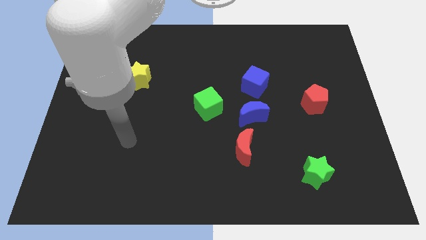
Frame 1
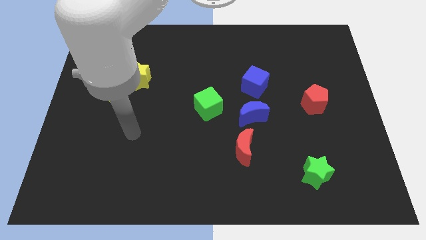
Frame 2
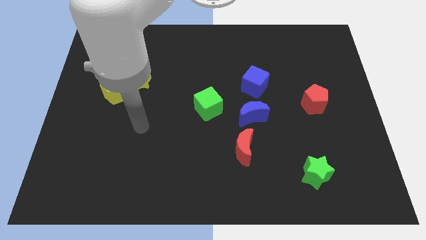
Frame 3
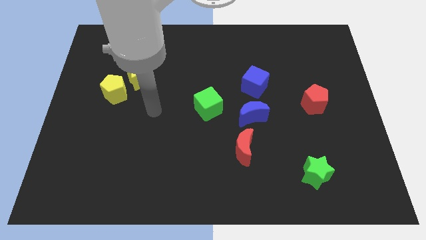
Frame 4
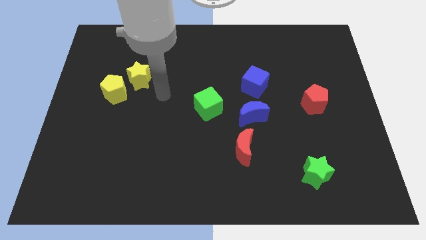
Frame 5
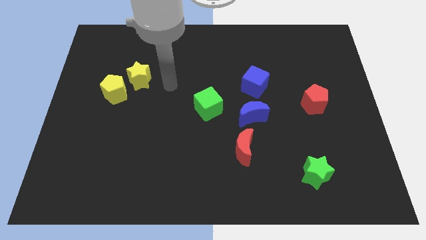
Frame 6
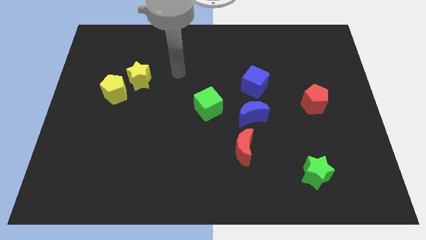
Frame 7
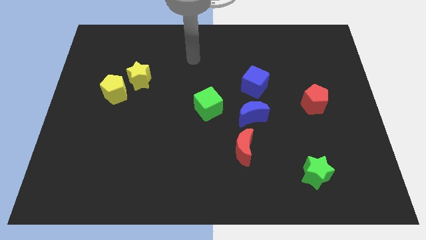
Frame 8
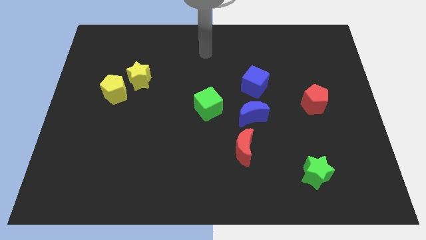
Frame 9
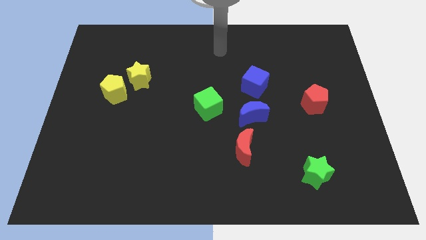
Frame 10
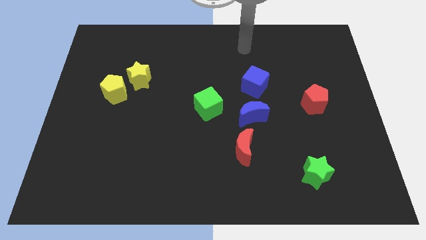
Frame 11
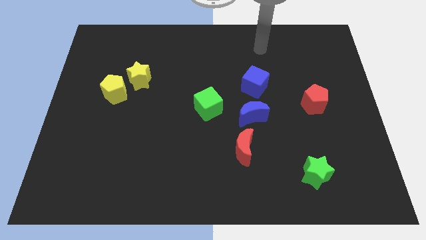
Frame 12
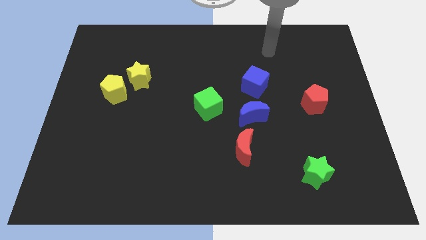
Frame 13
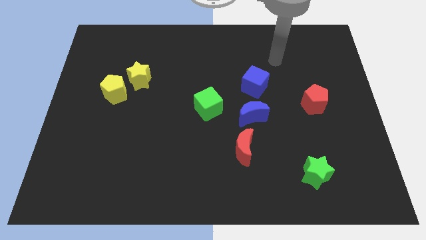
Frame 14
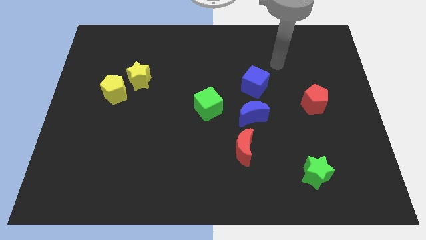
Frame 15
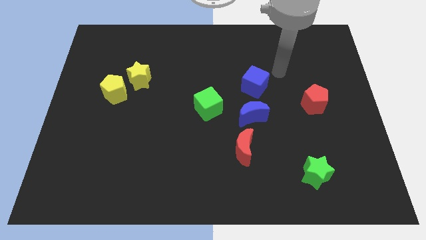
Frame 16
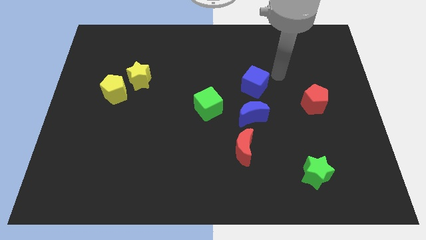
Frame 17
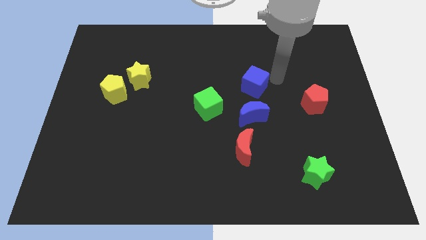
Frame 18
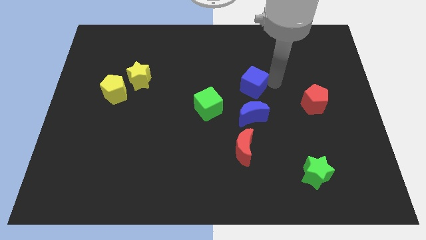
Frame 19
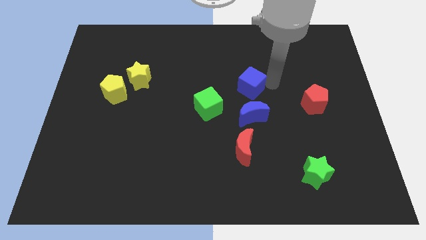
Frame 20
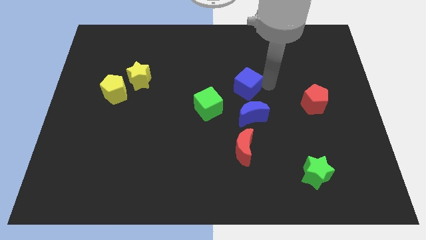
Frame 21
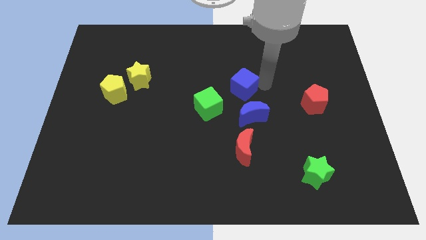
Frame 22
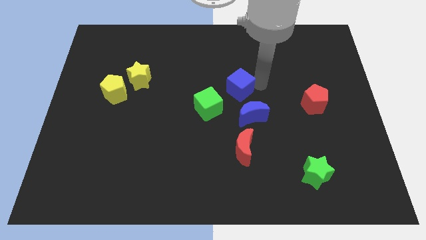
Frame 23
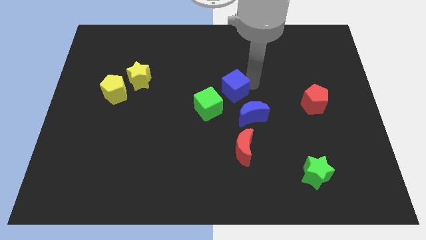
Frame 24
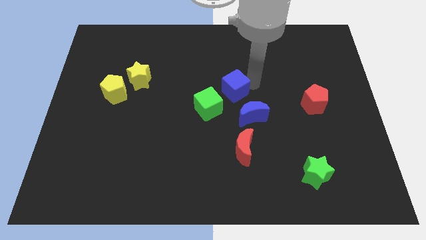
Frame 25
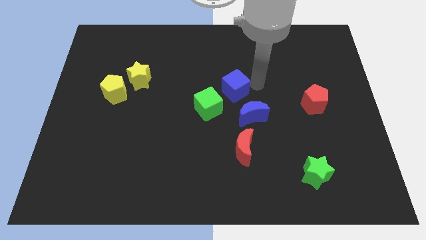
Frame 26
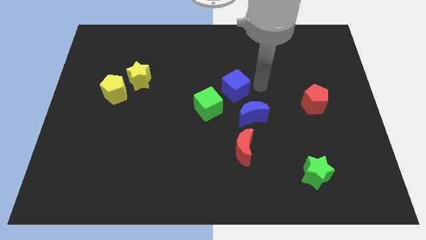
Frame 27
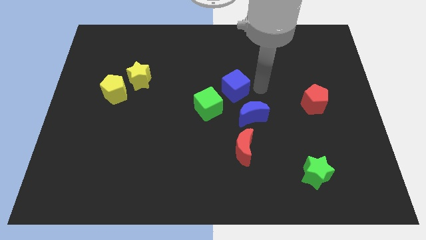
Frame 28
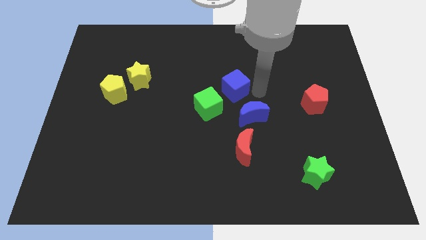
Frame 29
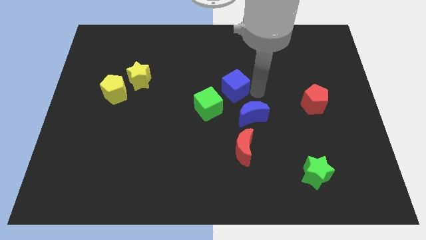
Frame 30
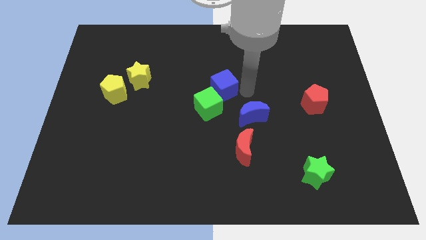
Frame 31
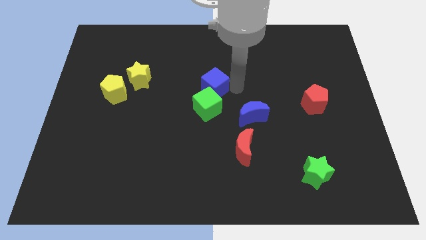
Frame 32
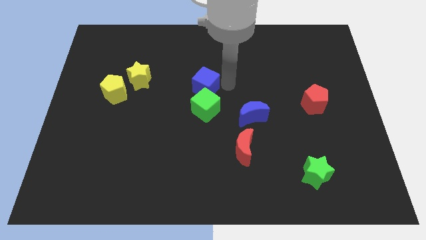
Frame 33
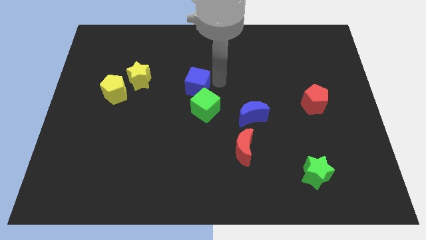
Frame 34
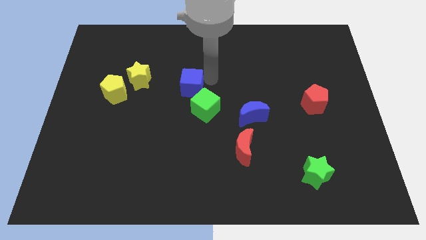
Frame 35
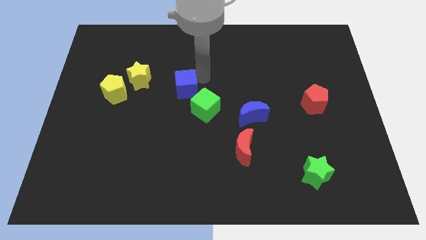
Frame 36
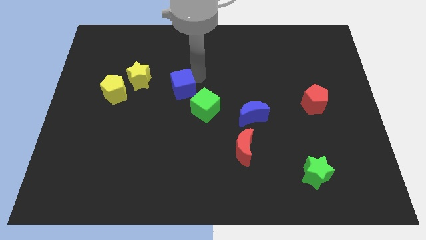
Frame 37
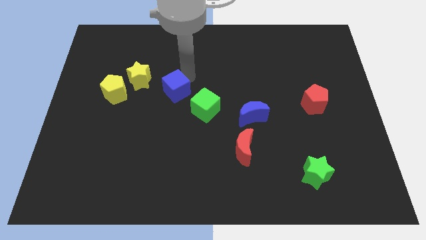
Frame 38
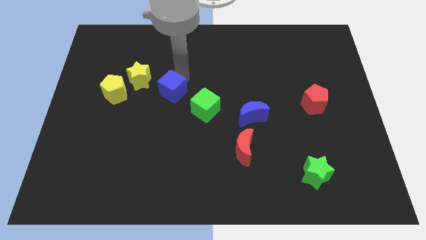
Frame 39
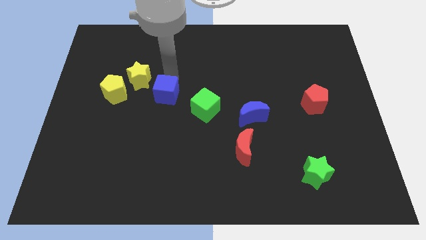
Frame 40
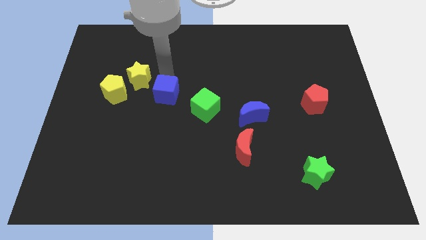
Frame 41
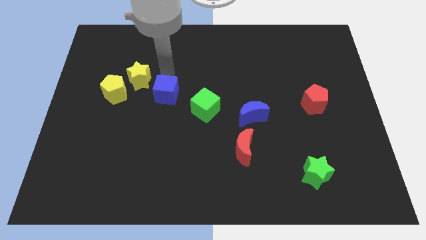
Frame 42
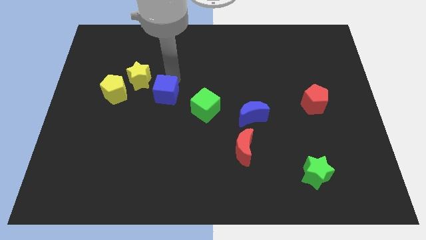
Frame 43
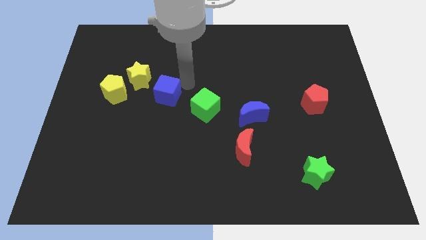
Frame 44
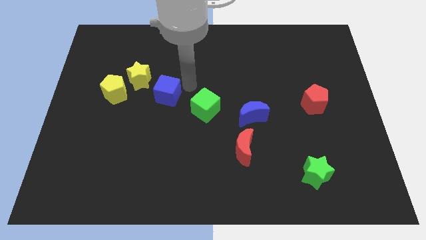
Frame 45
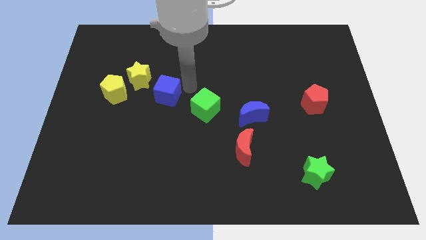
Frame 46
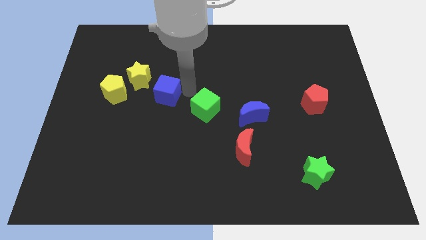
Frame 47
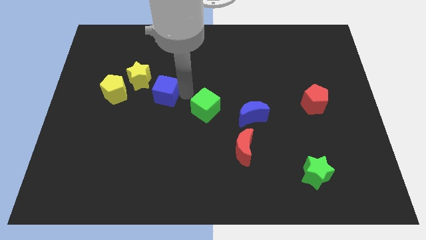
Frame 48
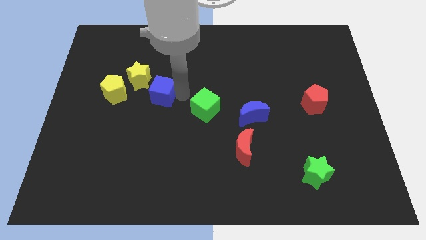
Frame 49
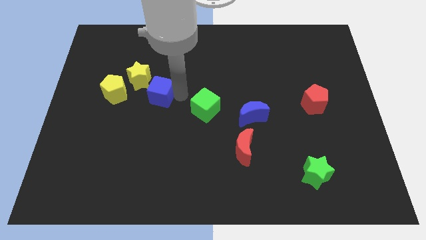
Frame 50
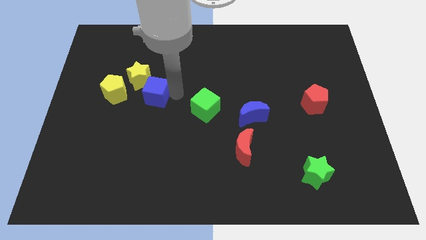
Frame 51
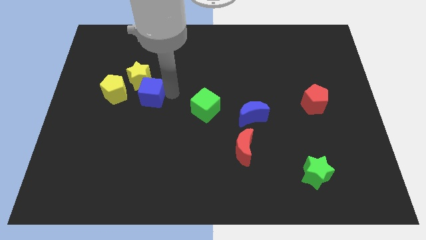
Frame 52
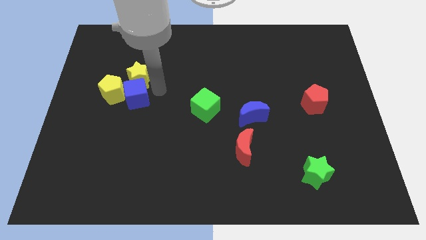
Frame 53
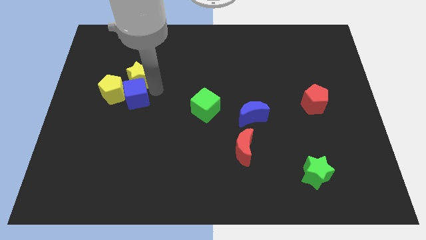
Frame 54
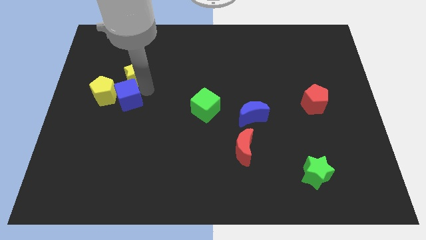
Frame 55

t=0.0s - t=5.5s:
put the blue cube close to the yellow pentagon

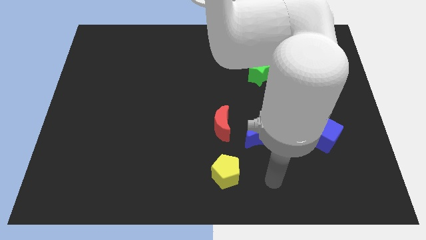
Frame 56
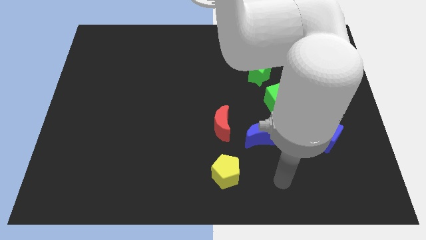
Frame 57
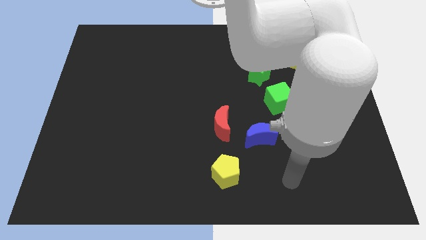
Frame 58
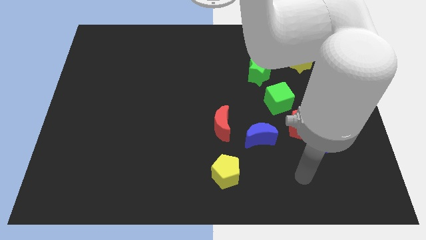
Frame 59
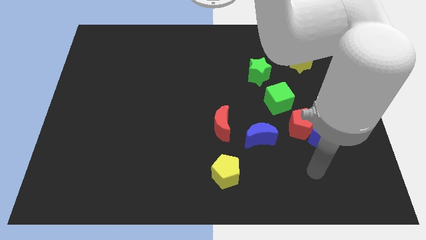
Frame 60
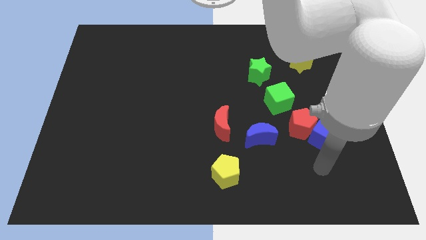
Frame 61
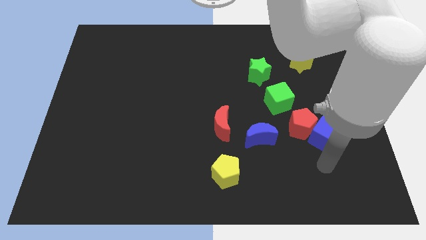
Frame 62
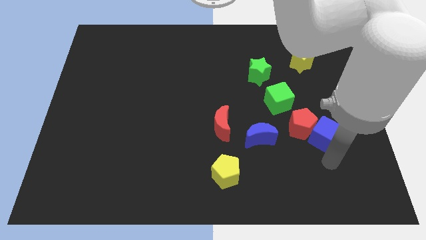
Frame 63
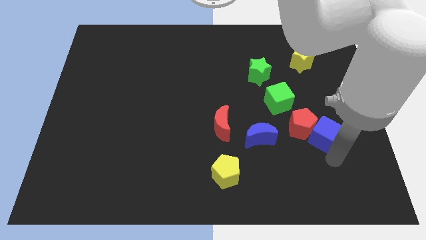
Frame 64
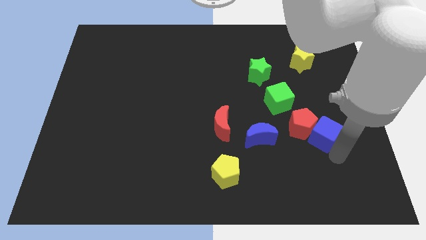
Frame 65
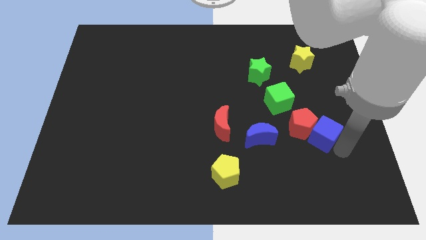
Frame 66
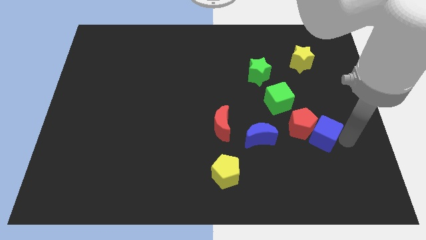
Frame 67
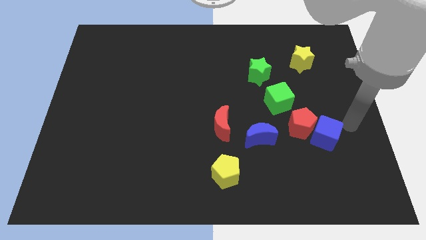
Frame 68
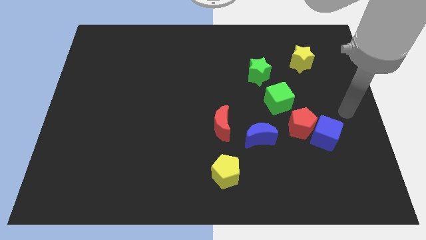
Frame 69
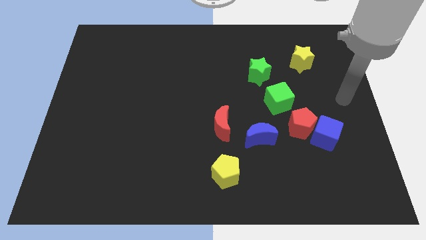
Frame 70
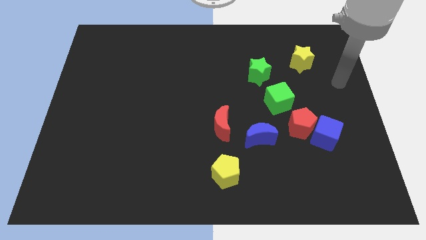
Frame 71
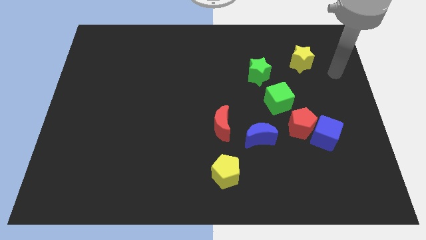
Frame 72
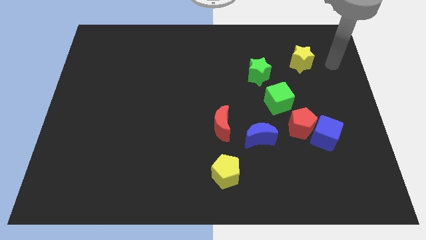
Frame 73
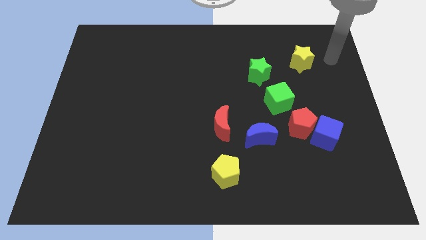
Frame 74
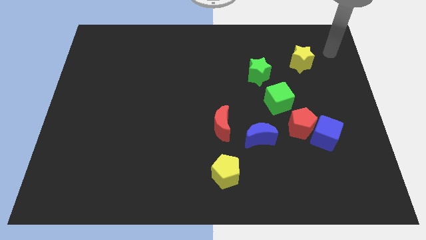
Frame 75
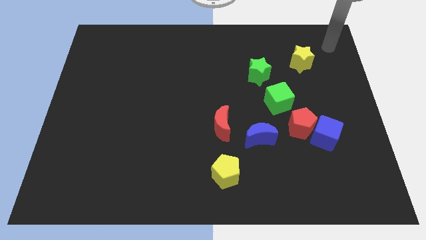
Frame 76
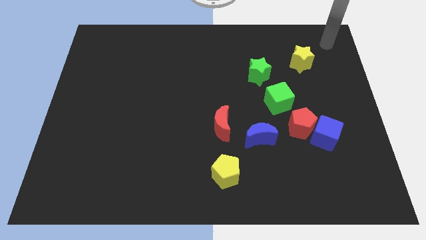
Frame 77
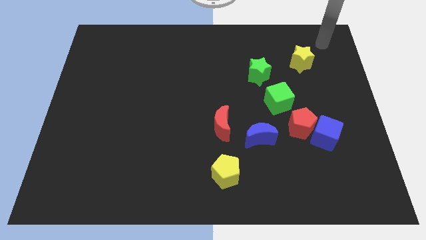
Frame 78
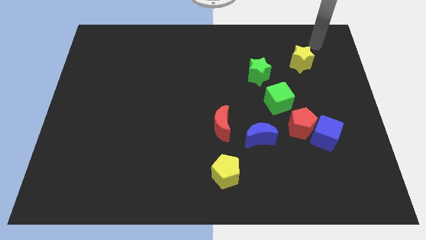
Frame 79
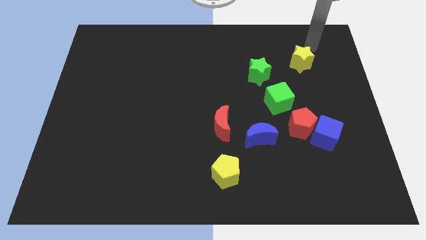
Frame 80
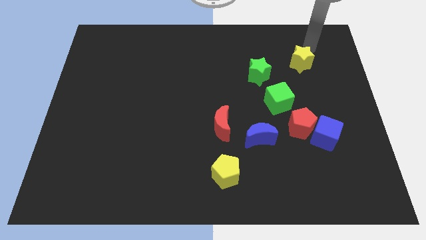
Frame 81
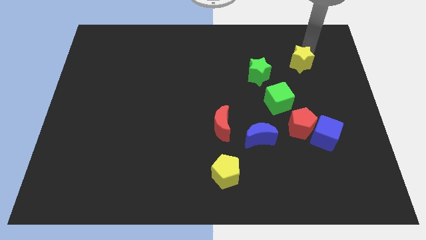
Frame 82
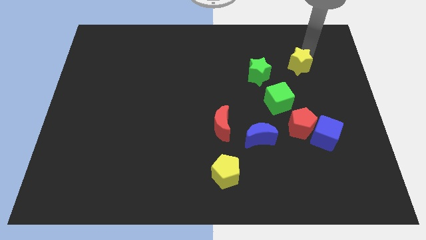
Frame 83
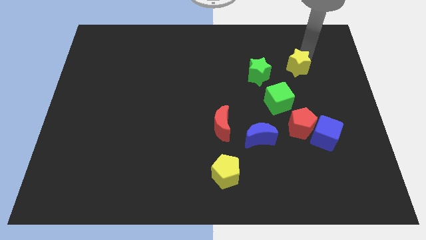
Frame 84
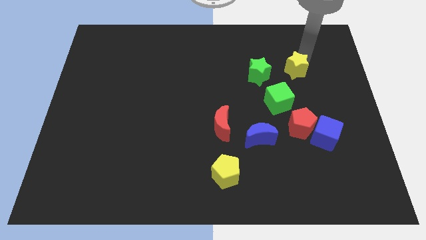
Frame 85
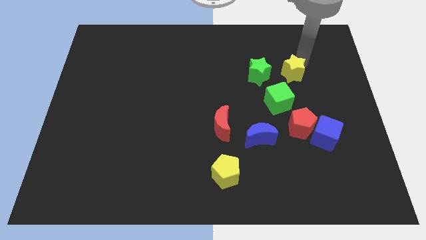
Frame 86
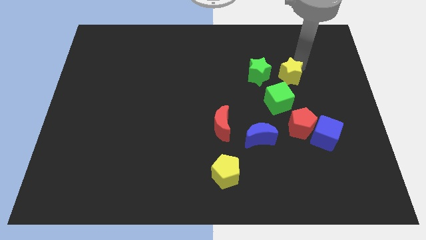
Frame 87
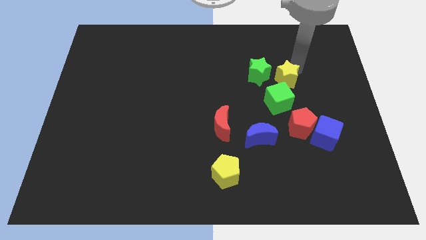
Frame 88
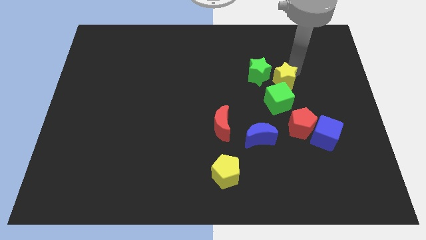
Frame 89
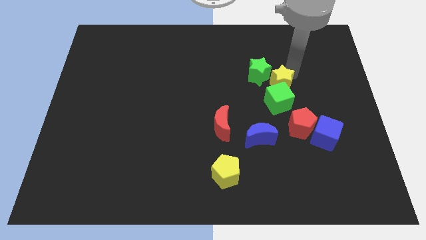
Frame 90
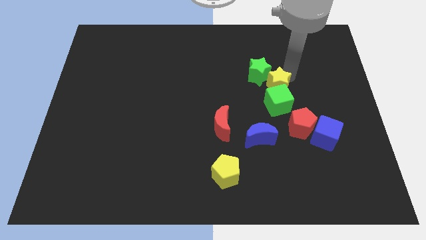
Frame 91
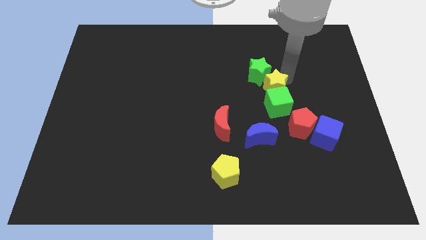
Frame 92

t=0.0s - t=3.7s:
put the yellow star close to the green cube
